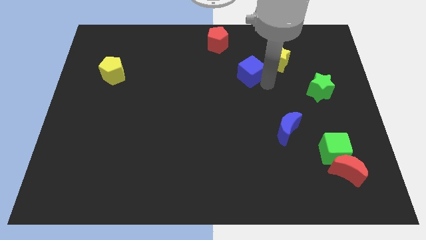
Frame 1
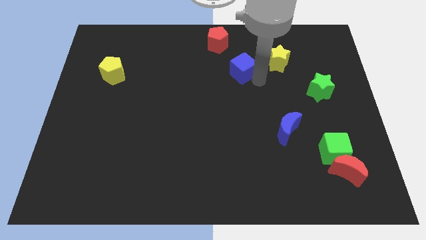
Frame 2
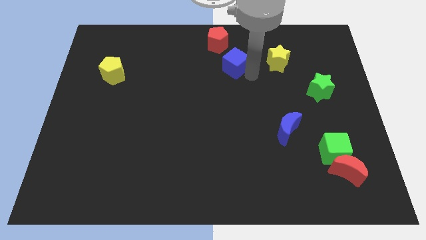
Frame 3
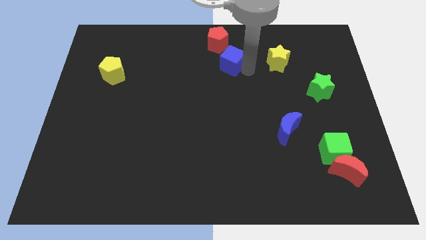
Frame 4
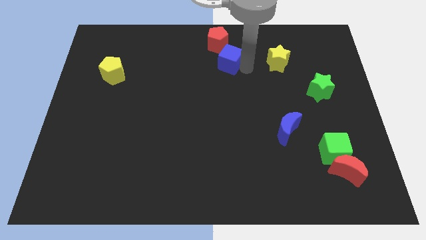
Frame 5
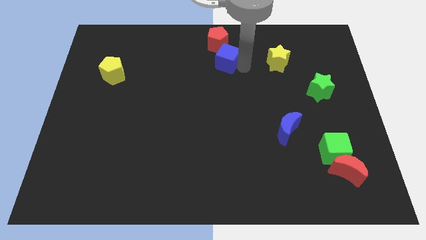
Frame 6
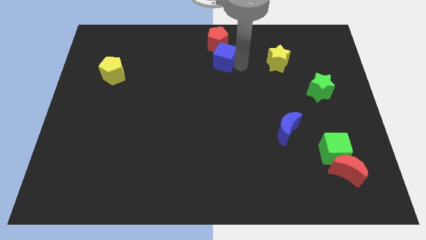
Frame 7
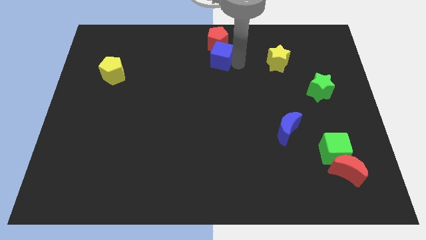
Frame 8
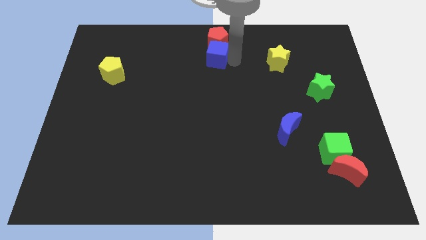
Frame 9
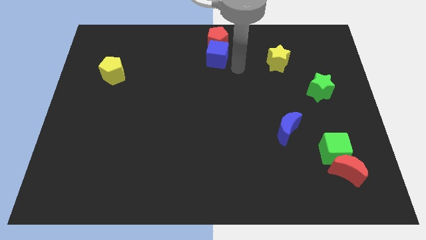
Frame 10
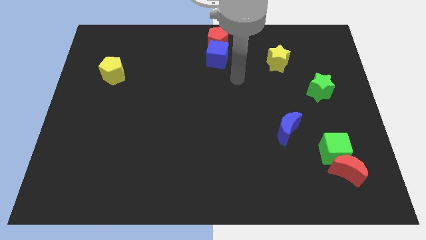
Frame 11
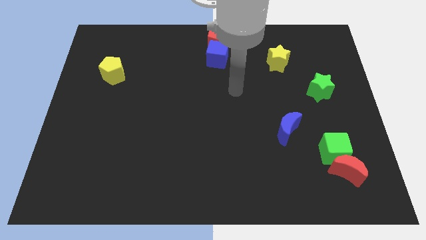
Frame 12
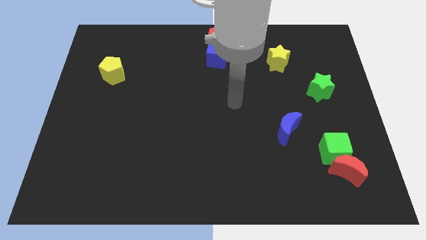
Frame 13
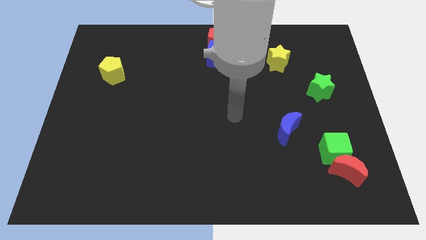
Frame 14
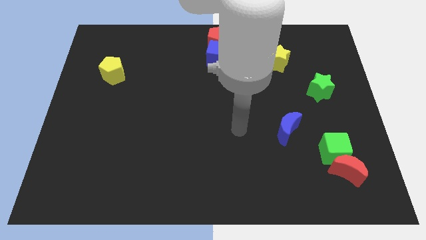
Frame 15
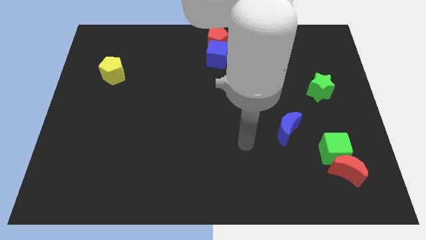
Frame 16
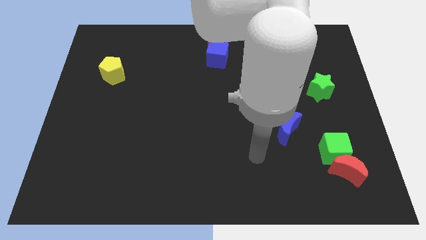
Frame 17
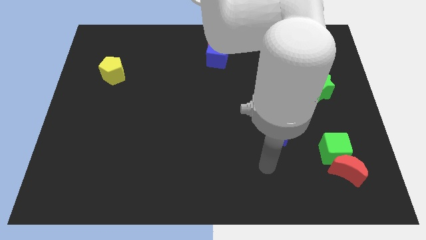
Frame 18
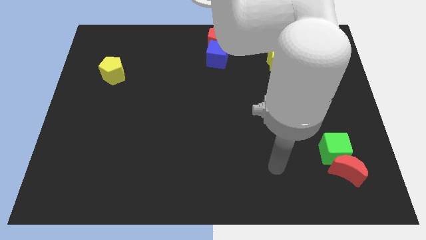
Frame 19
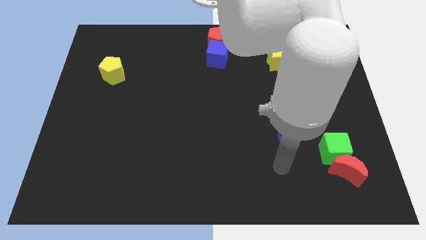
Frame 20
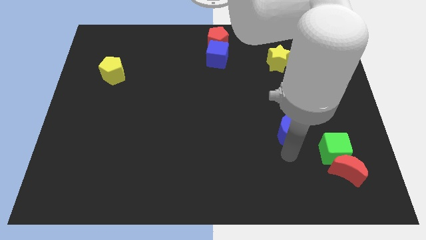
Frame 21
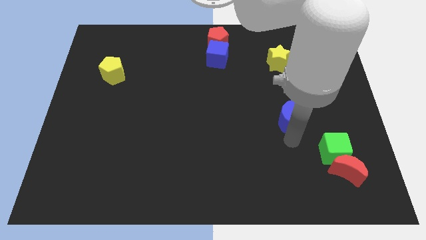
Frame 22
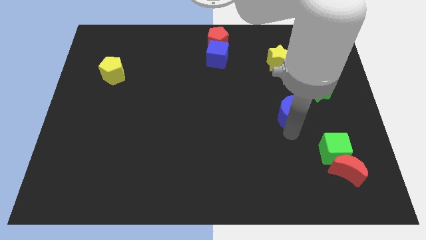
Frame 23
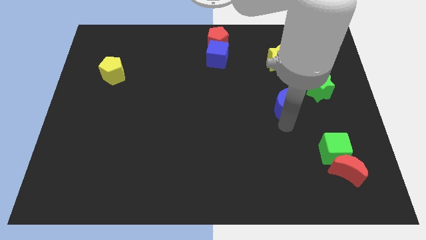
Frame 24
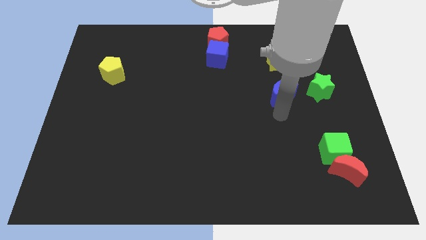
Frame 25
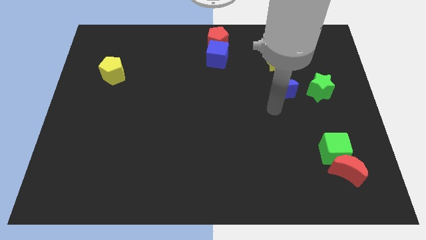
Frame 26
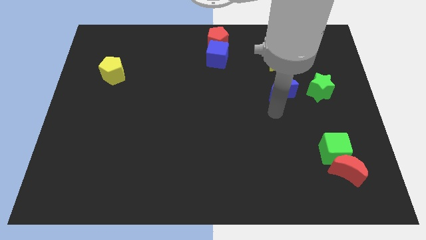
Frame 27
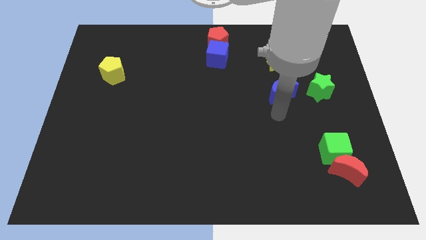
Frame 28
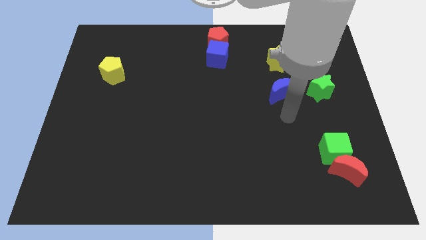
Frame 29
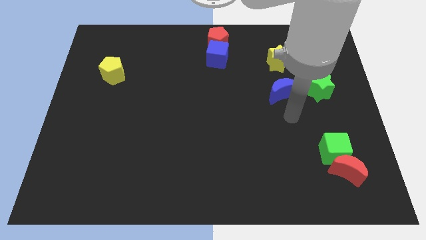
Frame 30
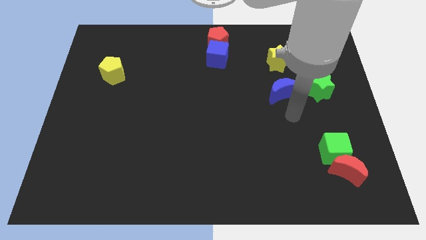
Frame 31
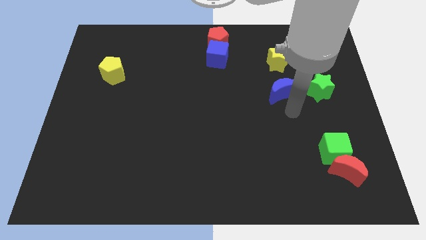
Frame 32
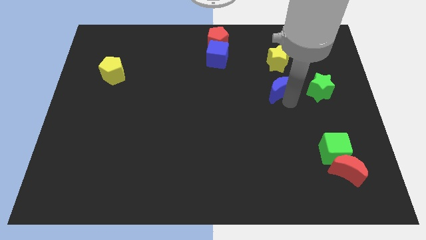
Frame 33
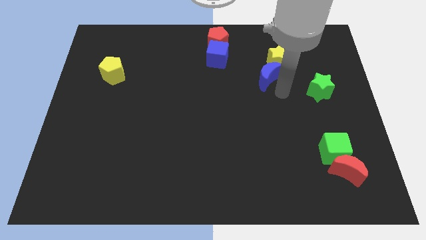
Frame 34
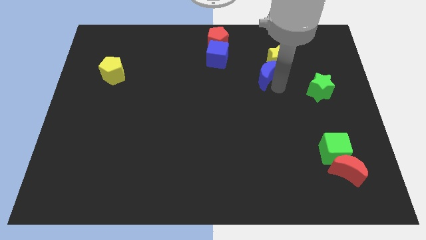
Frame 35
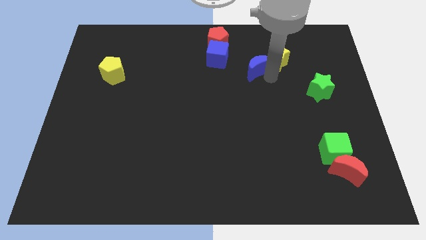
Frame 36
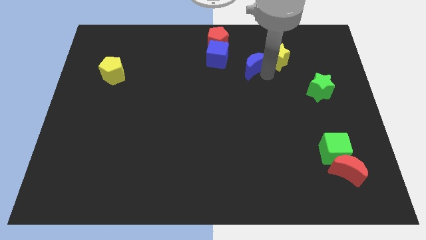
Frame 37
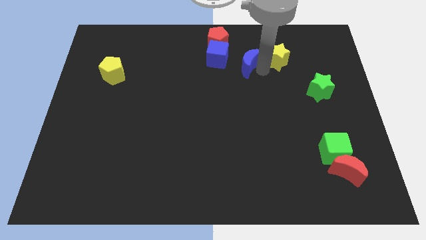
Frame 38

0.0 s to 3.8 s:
move the blue crescent near to the blue cube

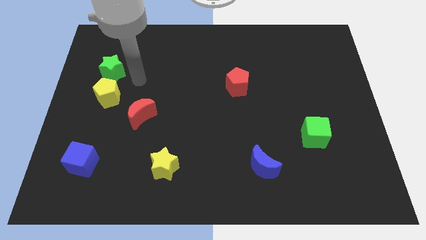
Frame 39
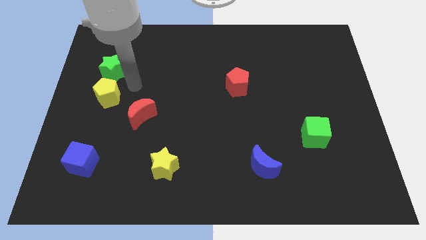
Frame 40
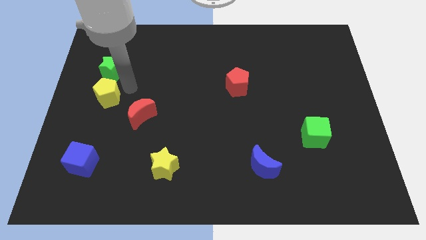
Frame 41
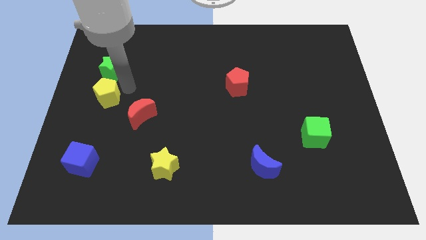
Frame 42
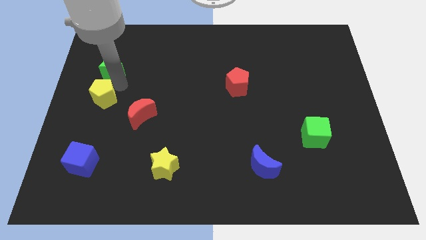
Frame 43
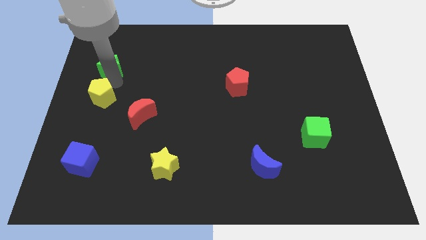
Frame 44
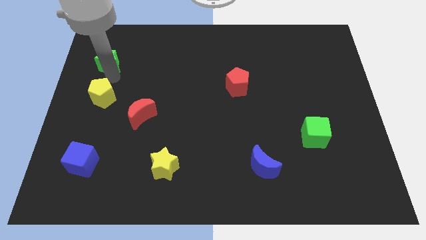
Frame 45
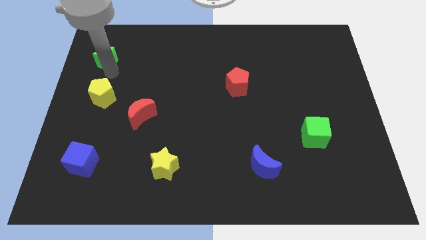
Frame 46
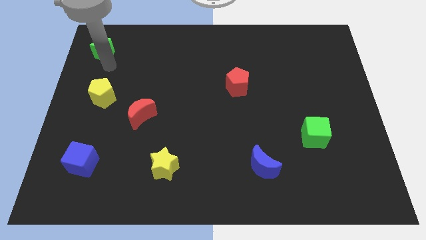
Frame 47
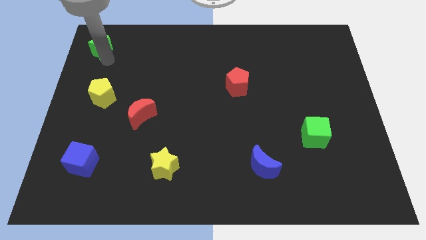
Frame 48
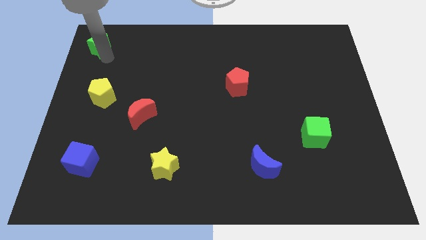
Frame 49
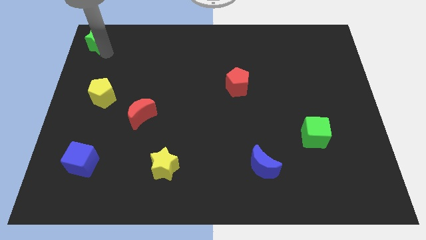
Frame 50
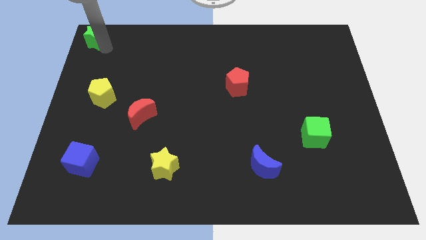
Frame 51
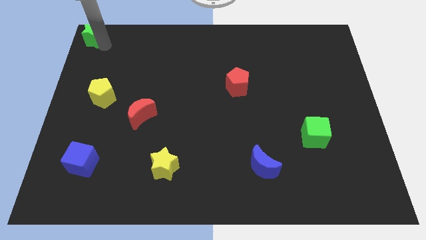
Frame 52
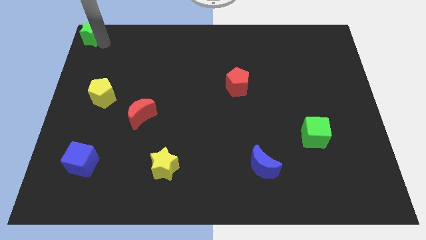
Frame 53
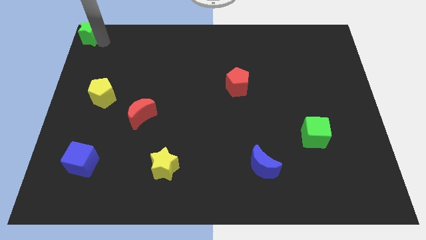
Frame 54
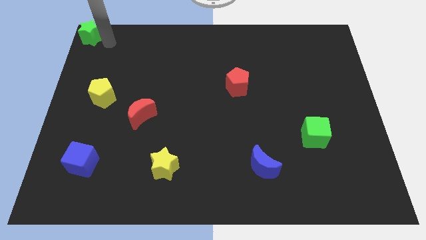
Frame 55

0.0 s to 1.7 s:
move the green star to the top left corner

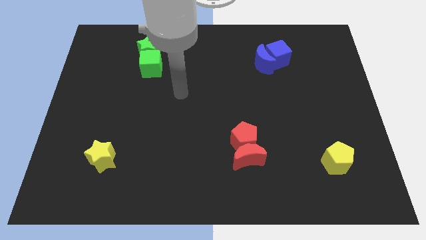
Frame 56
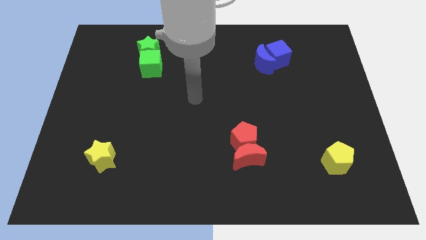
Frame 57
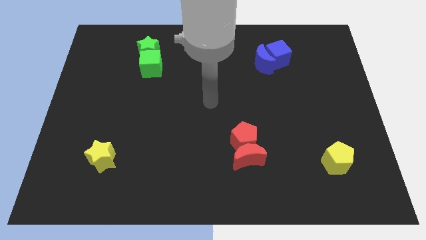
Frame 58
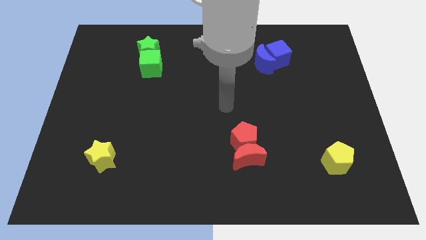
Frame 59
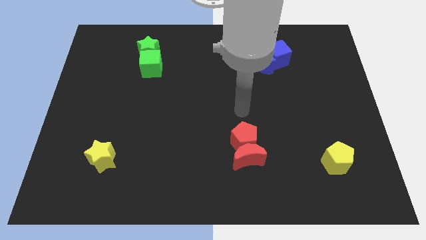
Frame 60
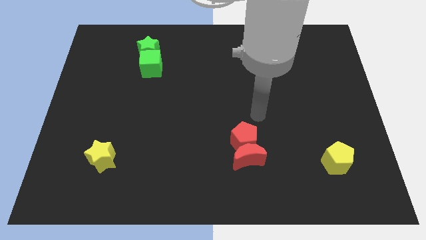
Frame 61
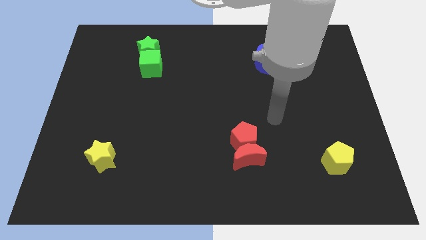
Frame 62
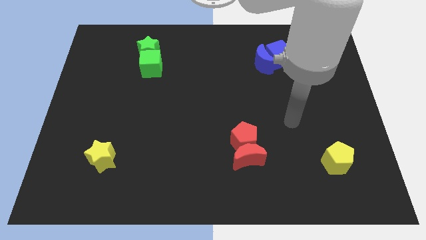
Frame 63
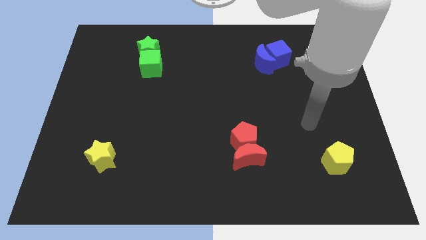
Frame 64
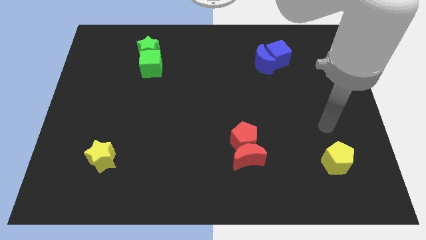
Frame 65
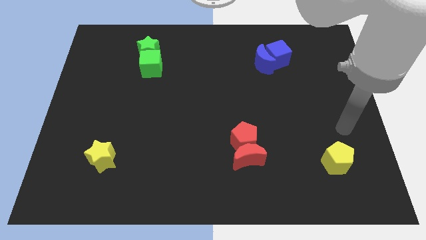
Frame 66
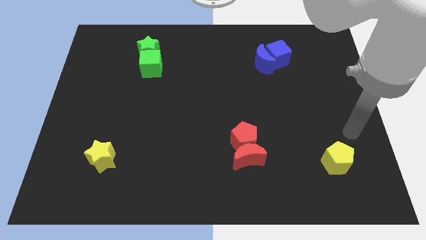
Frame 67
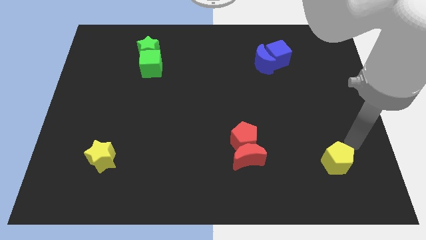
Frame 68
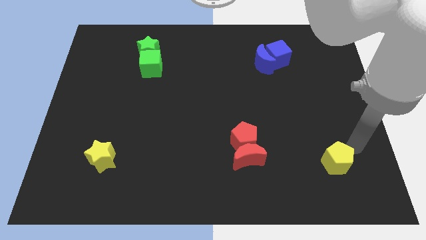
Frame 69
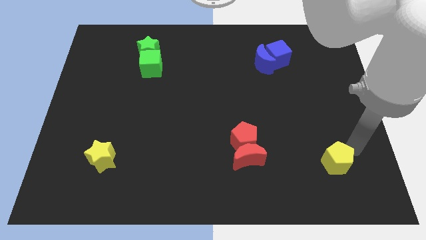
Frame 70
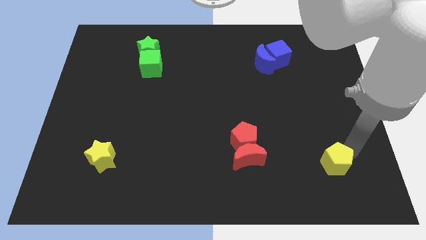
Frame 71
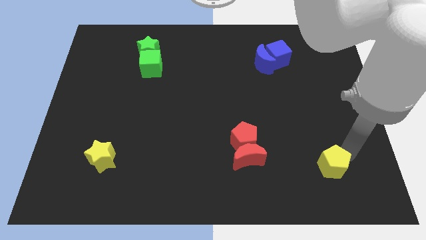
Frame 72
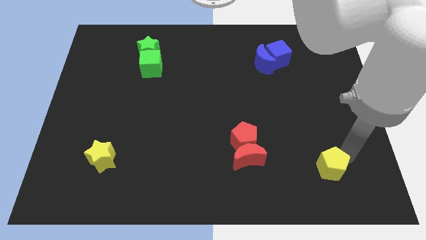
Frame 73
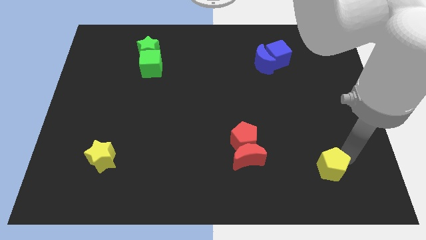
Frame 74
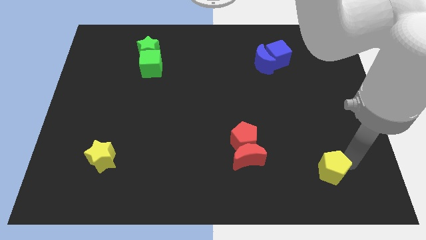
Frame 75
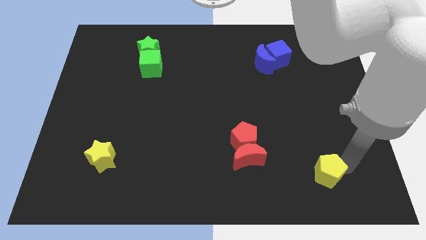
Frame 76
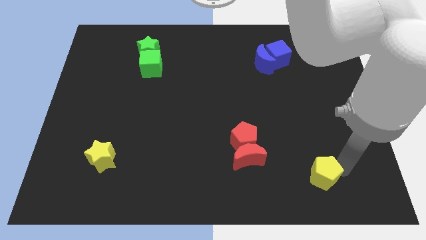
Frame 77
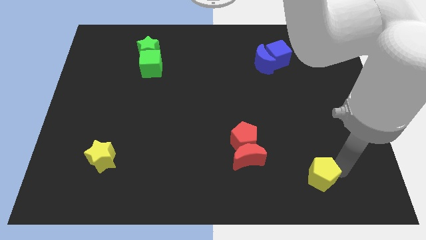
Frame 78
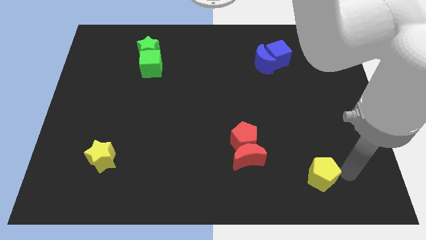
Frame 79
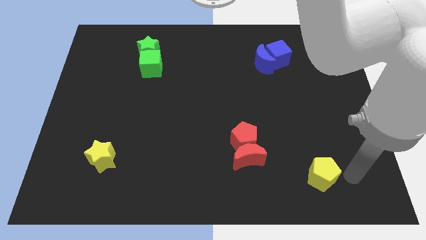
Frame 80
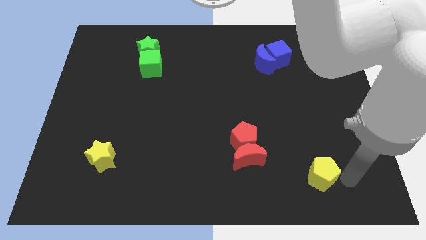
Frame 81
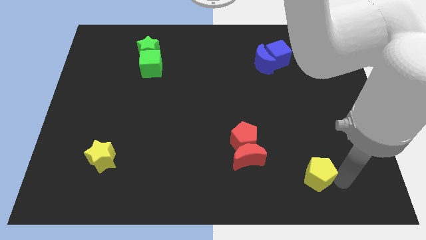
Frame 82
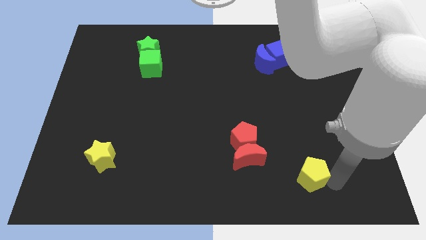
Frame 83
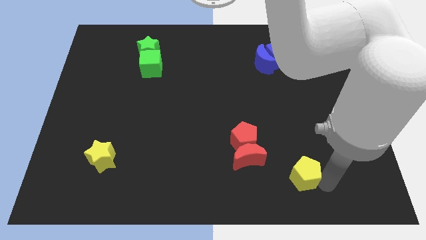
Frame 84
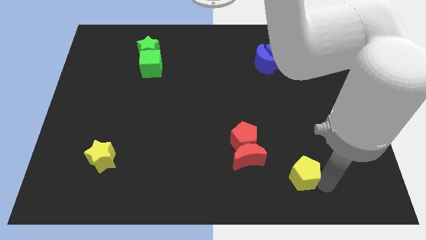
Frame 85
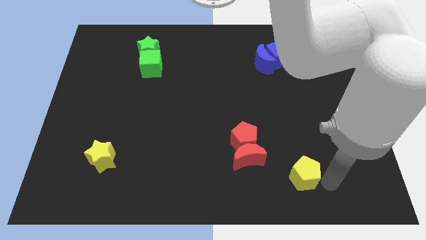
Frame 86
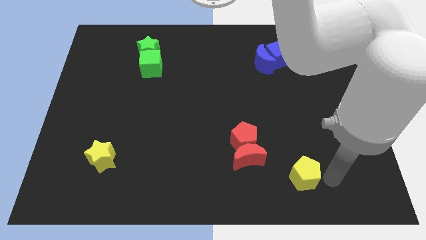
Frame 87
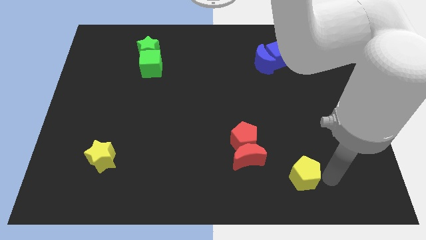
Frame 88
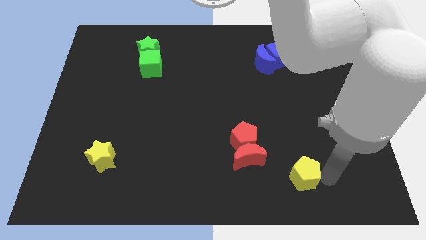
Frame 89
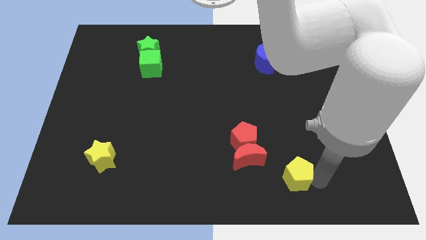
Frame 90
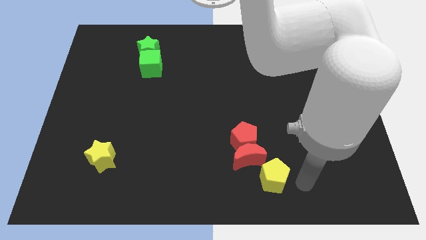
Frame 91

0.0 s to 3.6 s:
move the yellow pentagon at the bottom right of the red crescent
